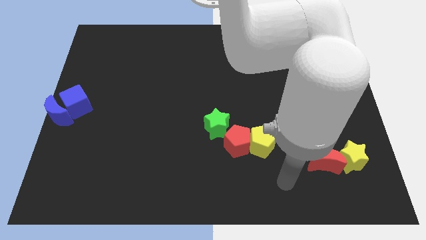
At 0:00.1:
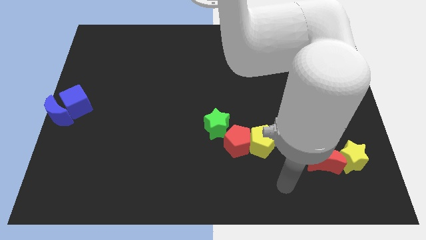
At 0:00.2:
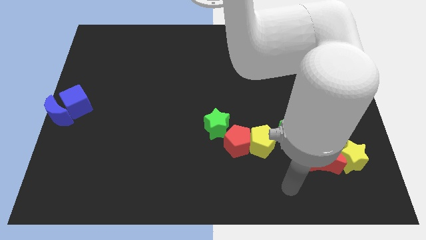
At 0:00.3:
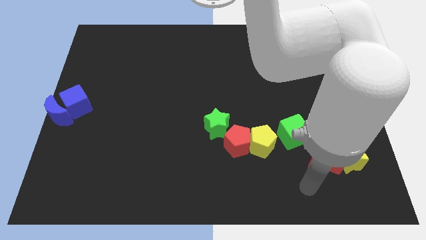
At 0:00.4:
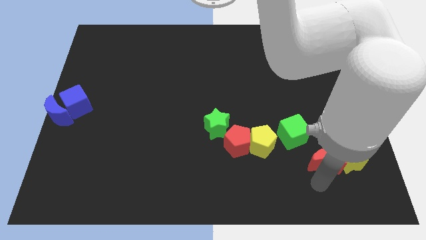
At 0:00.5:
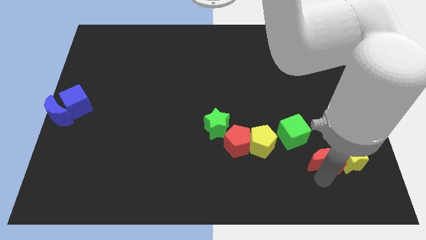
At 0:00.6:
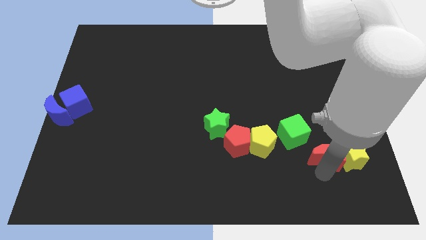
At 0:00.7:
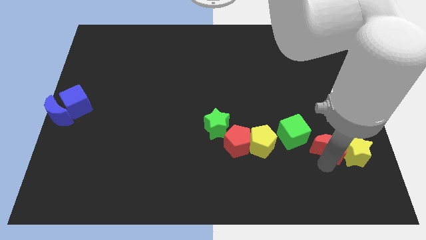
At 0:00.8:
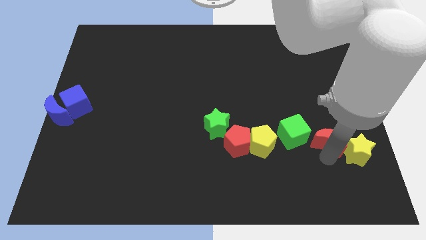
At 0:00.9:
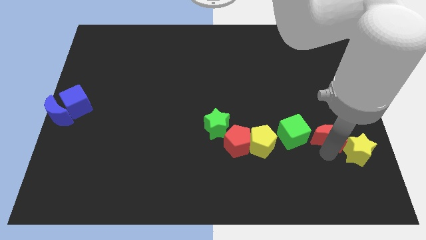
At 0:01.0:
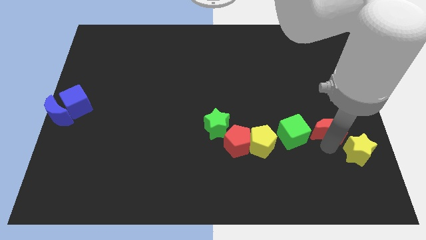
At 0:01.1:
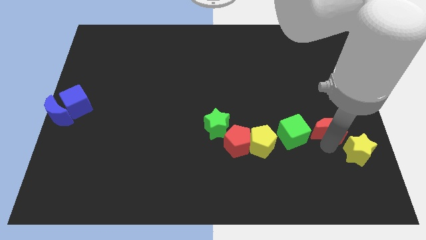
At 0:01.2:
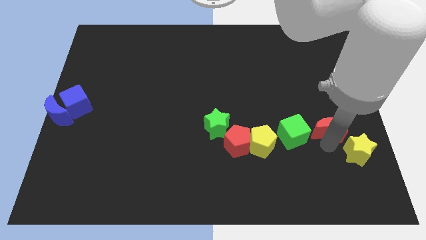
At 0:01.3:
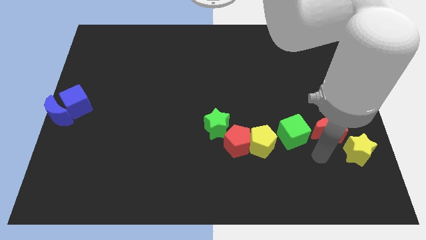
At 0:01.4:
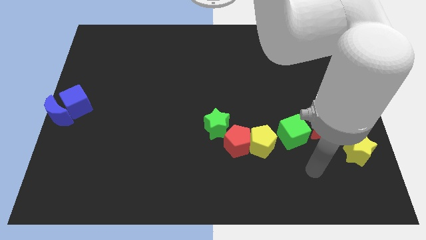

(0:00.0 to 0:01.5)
move the red moon to the left of the green cube

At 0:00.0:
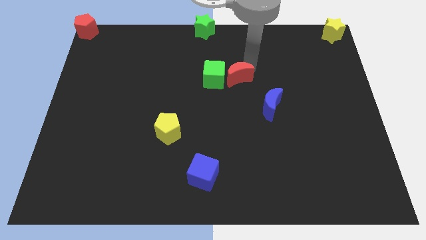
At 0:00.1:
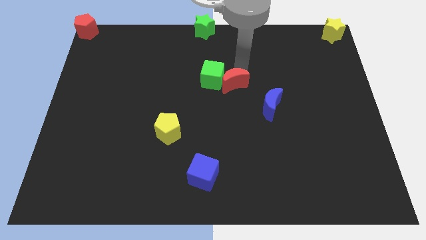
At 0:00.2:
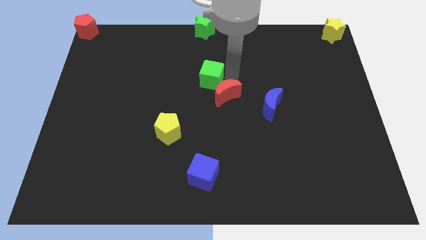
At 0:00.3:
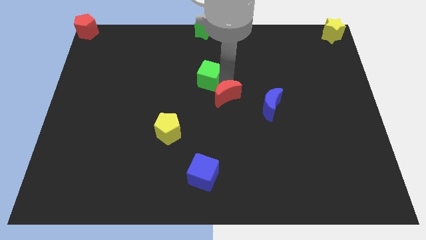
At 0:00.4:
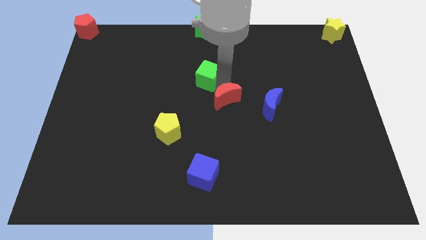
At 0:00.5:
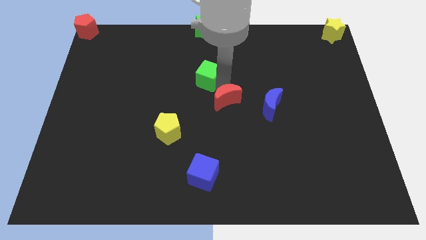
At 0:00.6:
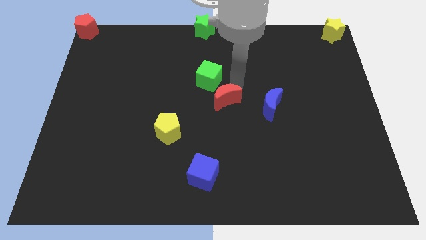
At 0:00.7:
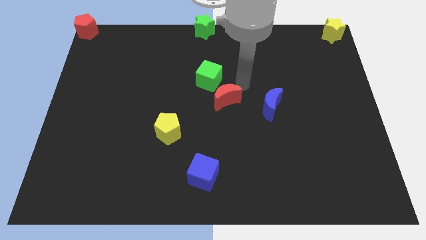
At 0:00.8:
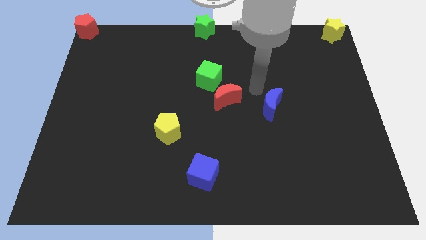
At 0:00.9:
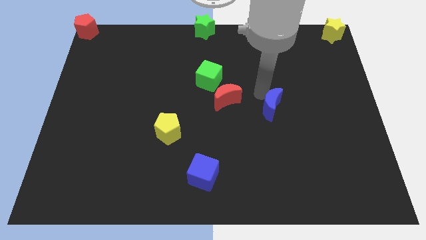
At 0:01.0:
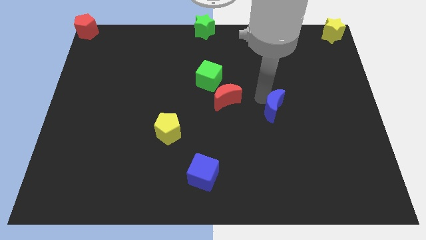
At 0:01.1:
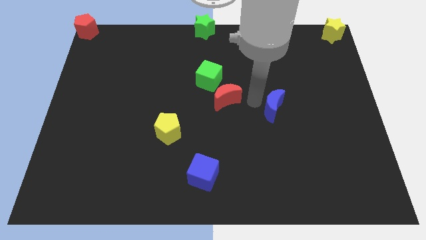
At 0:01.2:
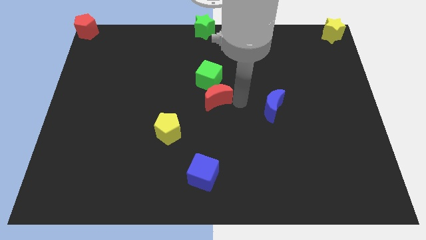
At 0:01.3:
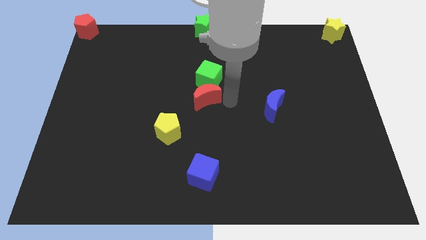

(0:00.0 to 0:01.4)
push the red moon to the bottom side of the green cube

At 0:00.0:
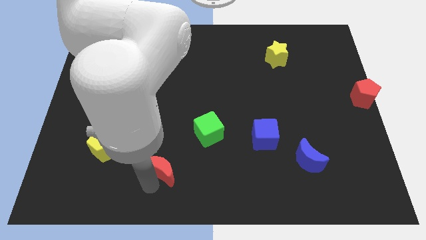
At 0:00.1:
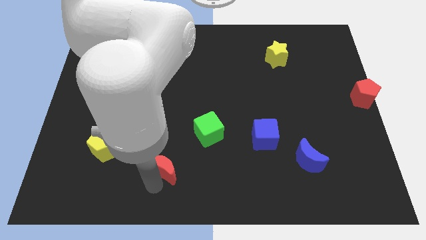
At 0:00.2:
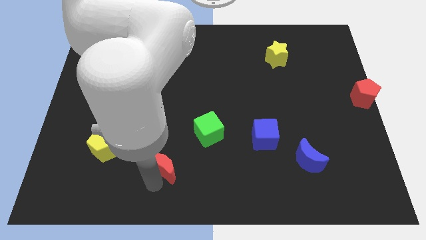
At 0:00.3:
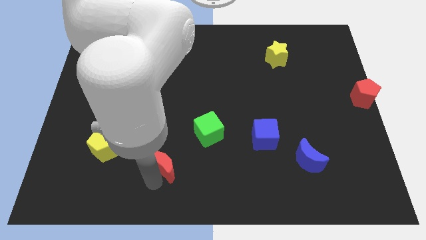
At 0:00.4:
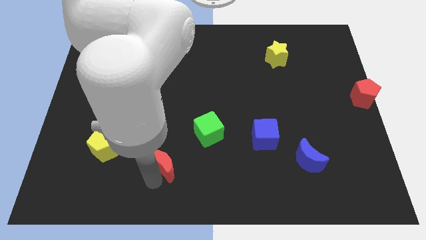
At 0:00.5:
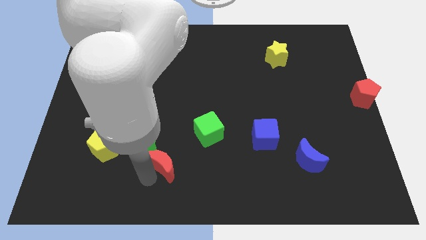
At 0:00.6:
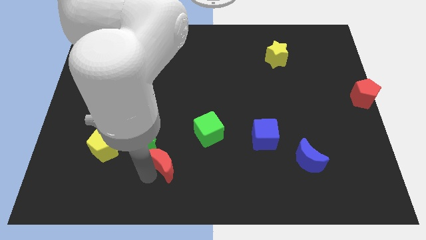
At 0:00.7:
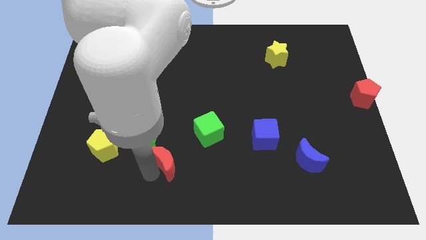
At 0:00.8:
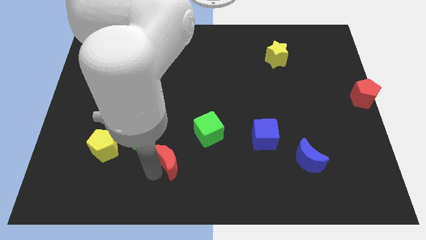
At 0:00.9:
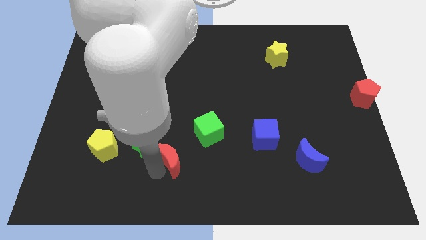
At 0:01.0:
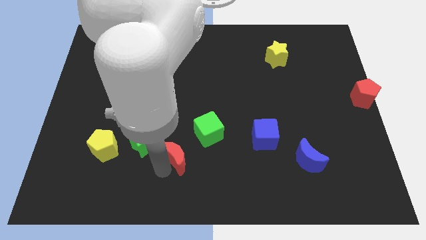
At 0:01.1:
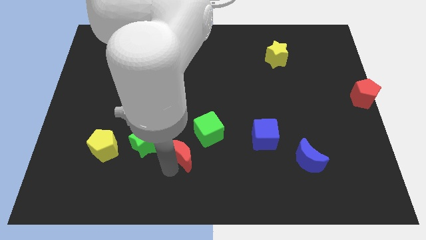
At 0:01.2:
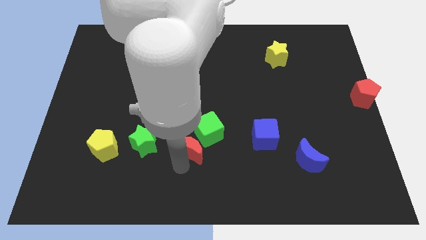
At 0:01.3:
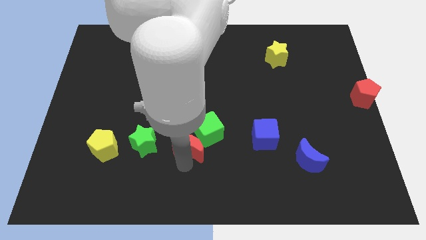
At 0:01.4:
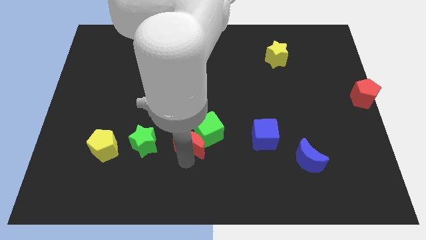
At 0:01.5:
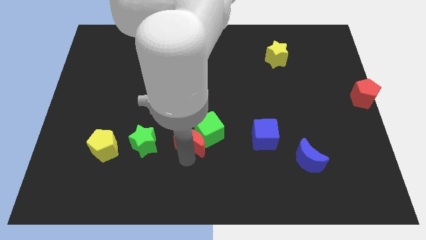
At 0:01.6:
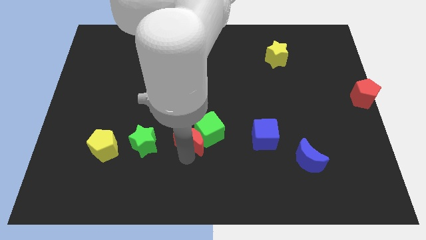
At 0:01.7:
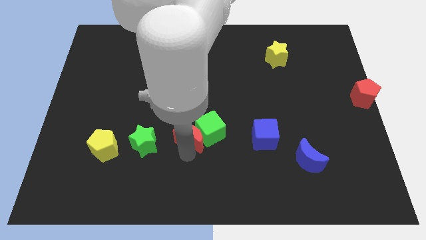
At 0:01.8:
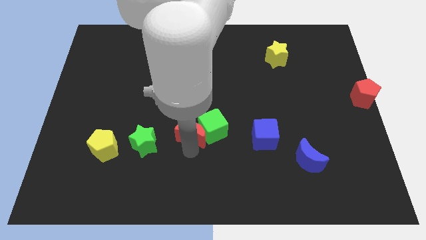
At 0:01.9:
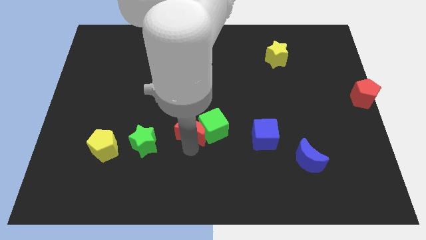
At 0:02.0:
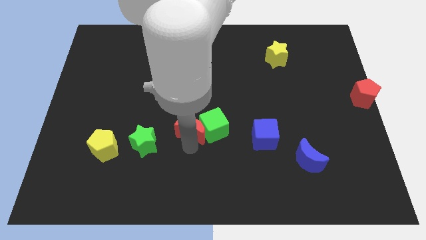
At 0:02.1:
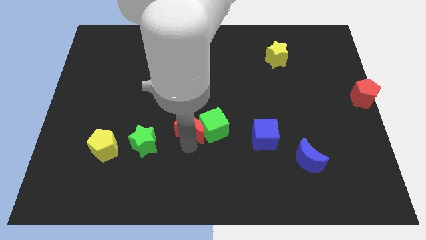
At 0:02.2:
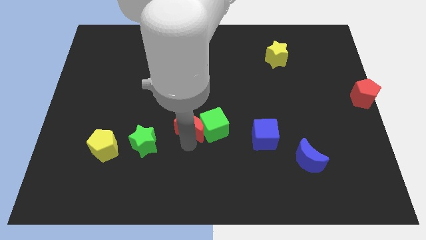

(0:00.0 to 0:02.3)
move the red crescent to the left of the green cube

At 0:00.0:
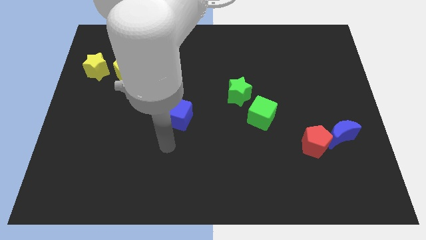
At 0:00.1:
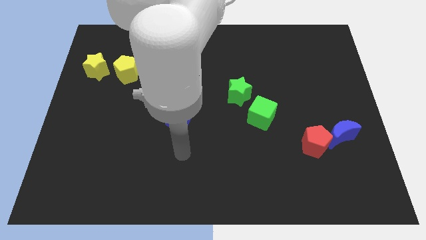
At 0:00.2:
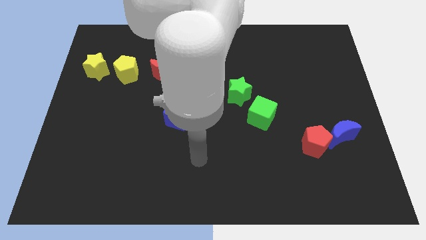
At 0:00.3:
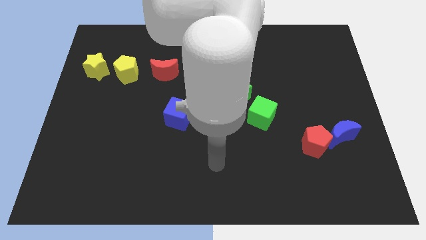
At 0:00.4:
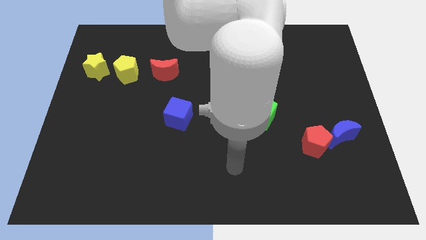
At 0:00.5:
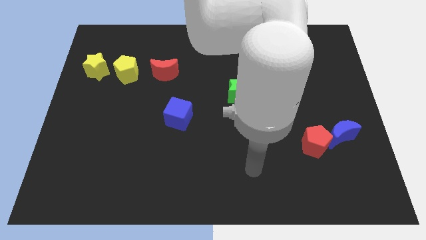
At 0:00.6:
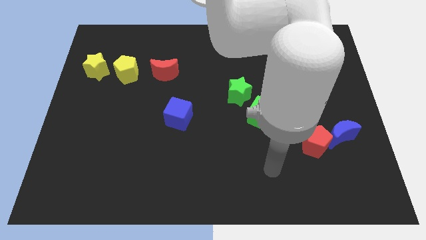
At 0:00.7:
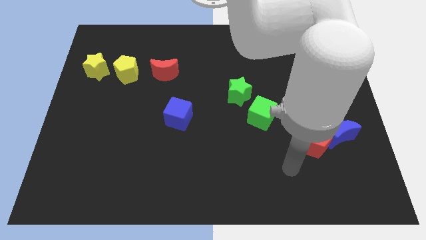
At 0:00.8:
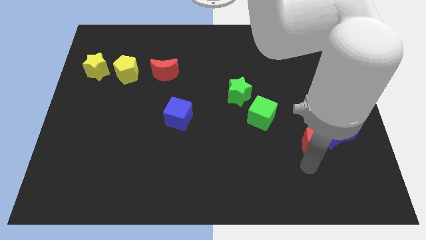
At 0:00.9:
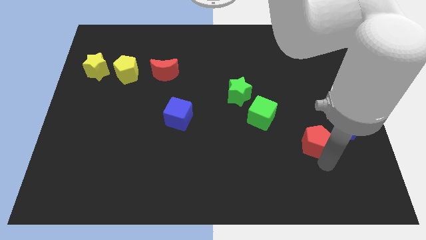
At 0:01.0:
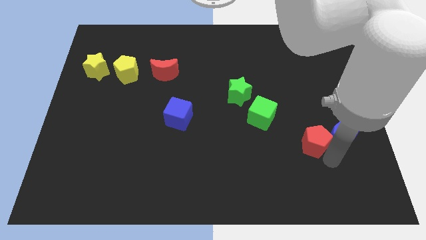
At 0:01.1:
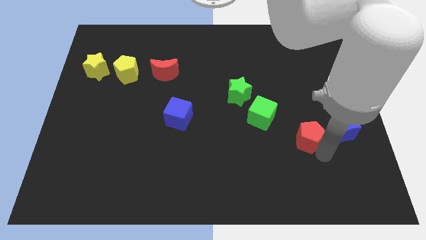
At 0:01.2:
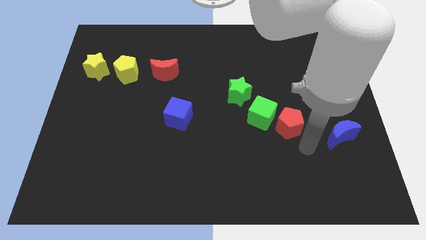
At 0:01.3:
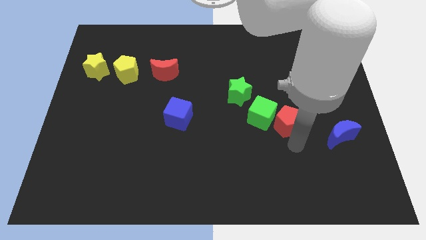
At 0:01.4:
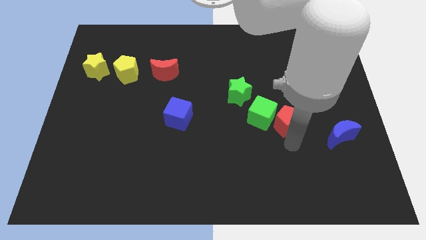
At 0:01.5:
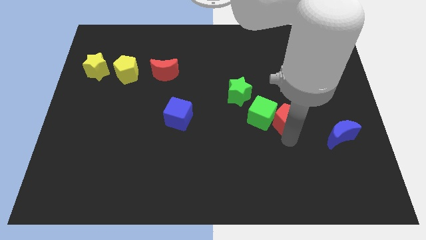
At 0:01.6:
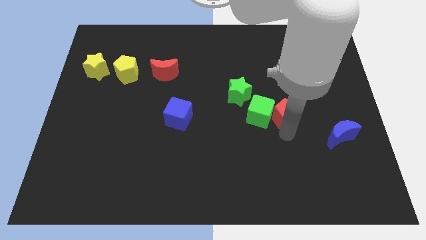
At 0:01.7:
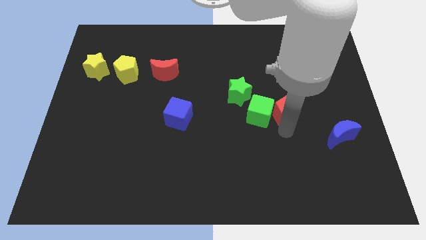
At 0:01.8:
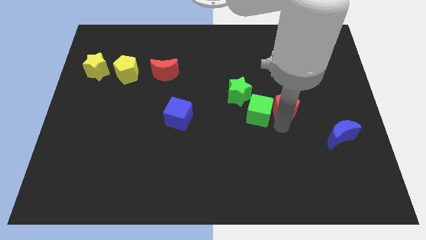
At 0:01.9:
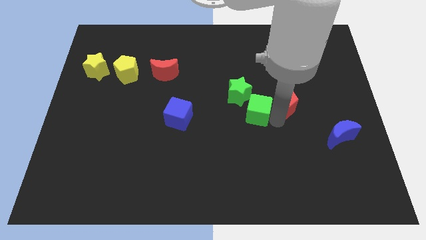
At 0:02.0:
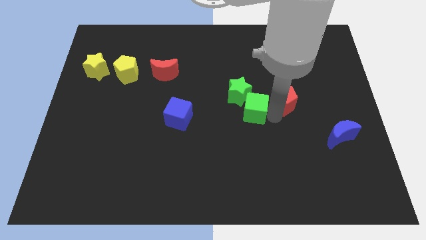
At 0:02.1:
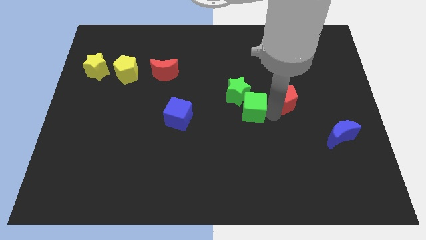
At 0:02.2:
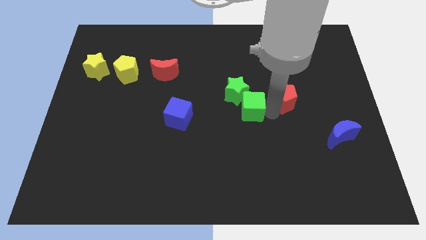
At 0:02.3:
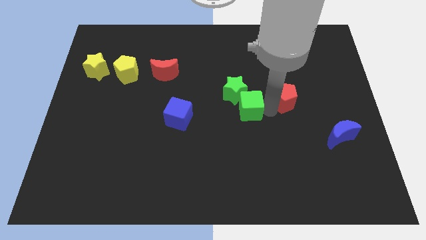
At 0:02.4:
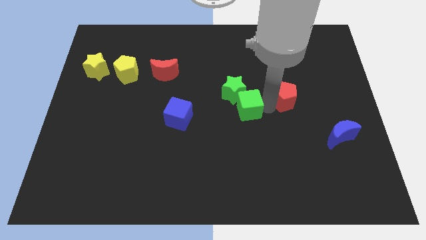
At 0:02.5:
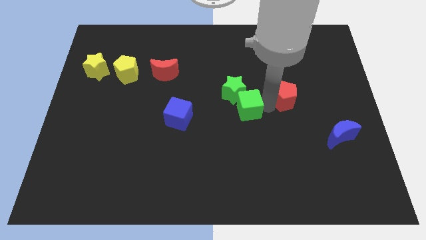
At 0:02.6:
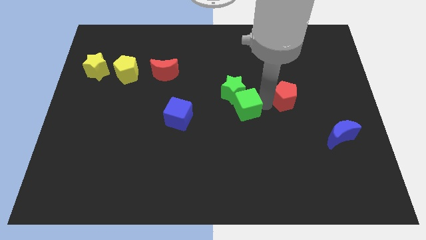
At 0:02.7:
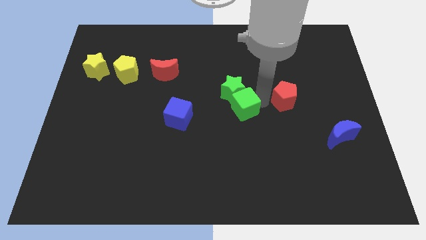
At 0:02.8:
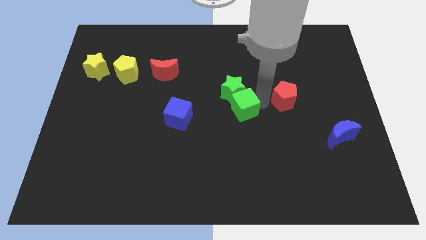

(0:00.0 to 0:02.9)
move the red pentagon right to the green cube

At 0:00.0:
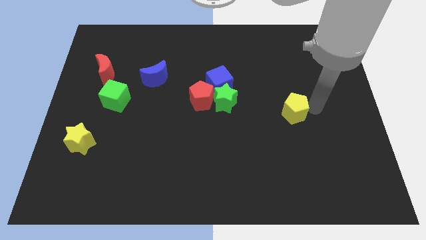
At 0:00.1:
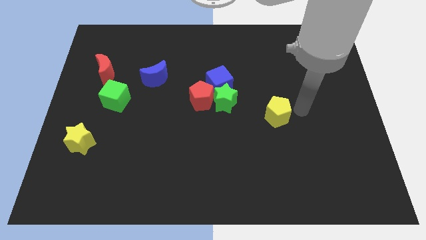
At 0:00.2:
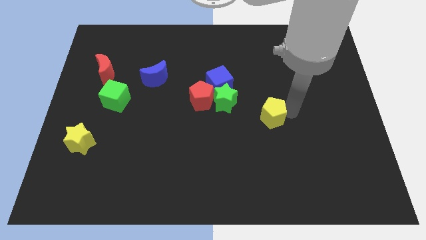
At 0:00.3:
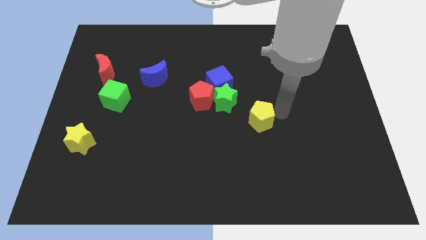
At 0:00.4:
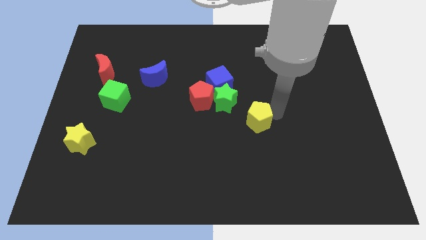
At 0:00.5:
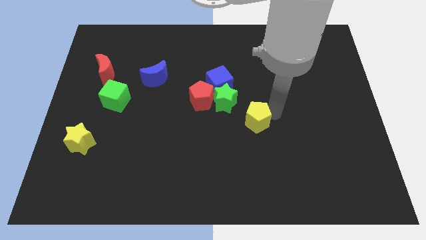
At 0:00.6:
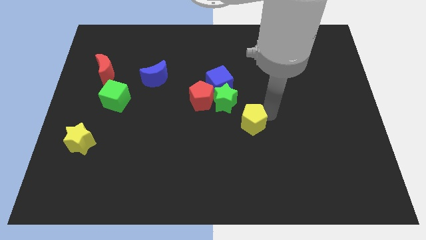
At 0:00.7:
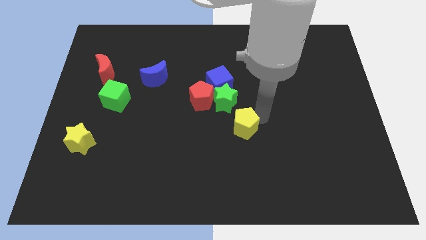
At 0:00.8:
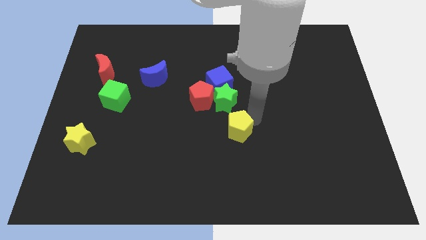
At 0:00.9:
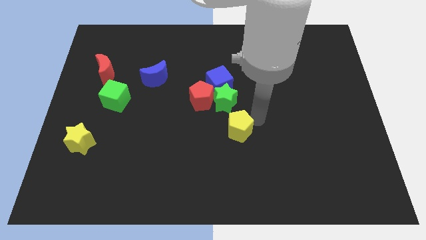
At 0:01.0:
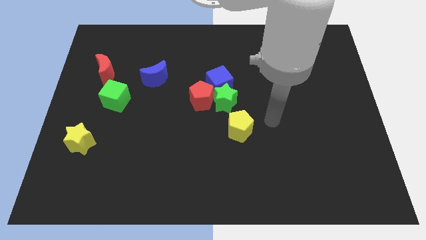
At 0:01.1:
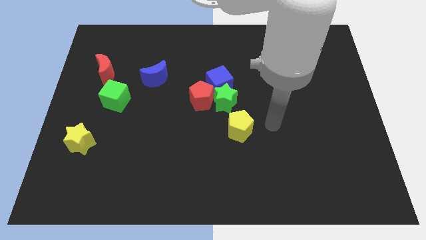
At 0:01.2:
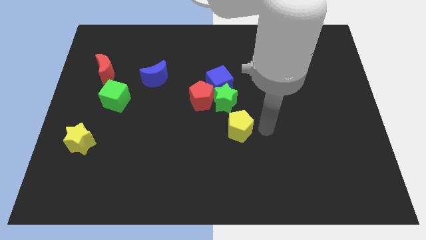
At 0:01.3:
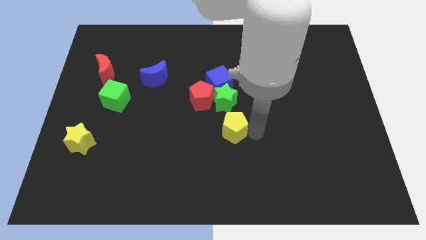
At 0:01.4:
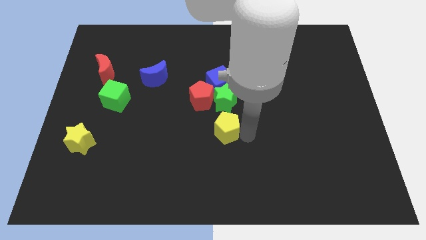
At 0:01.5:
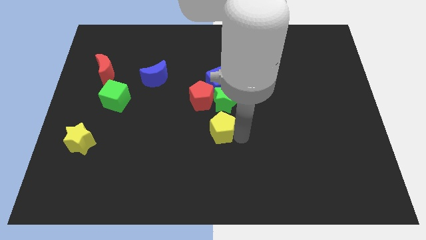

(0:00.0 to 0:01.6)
place the yellow pentagon below the green star
